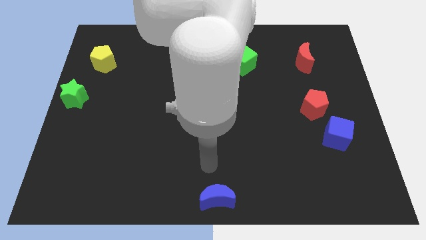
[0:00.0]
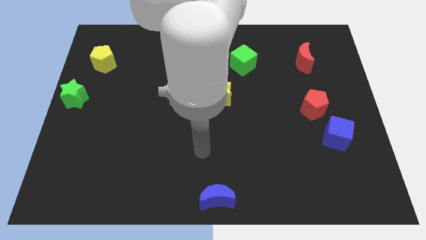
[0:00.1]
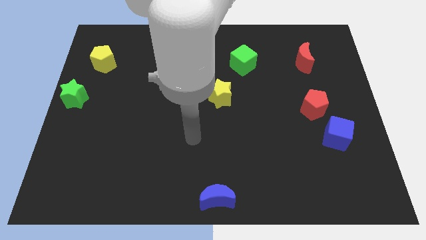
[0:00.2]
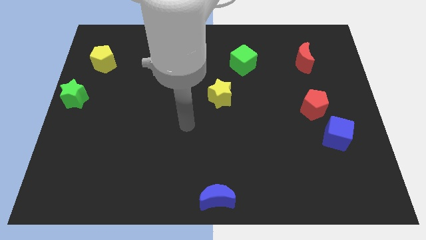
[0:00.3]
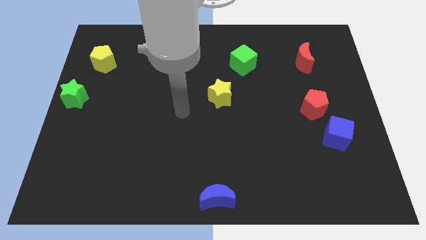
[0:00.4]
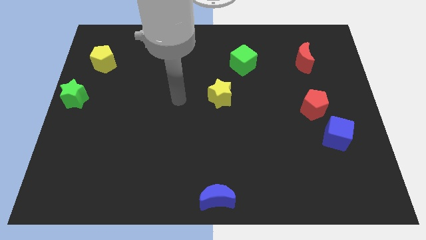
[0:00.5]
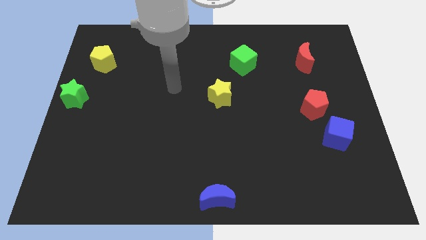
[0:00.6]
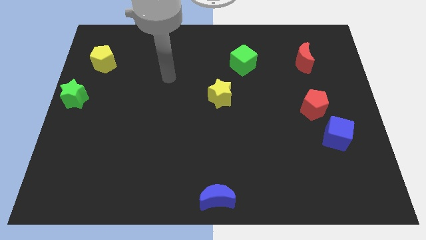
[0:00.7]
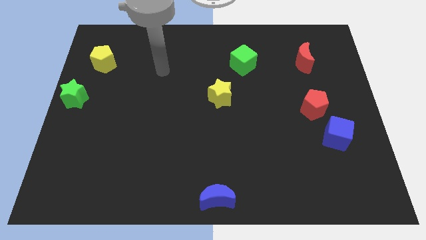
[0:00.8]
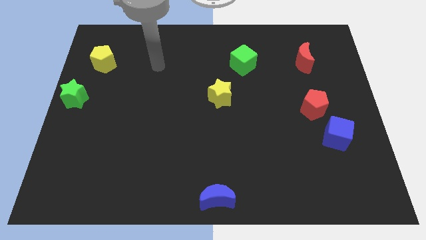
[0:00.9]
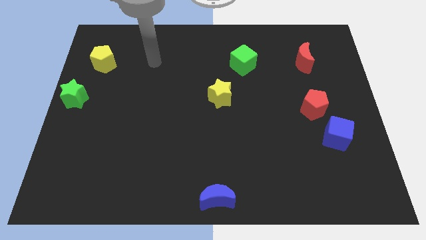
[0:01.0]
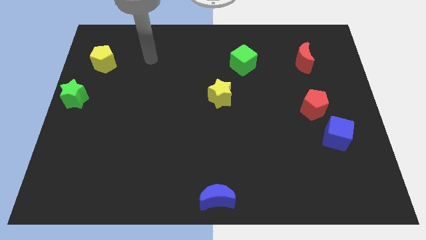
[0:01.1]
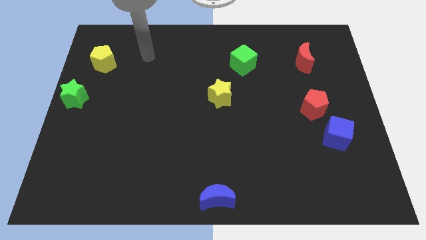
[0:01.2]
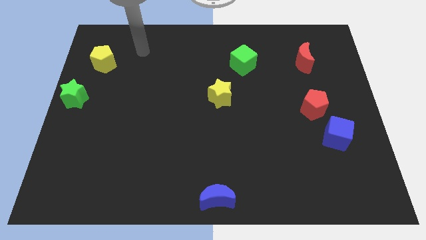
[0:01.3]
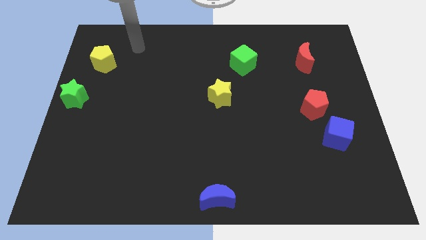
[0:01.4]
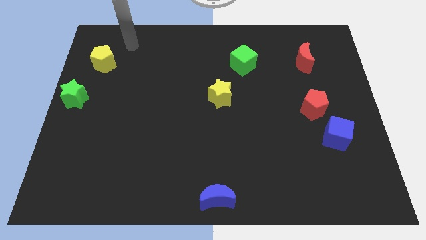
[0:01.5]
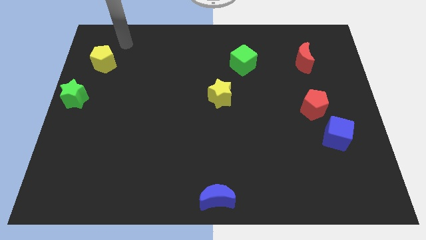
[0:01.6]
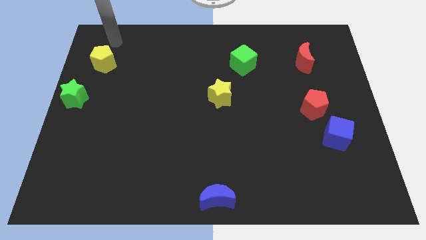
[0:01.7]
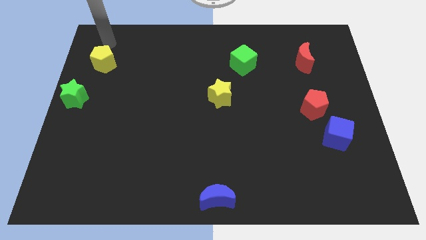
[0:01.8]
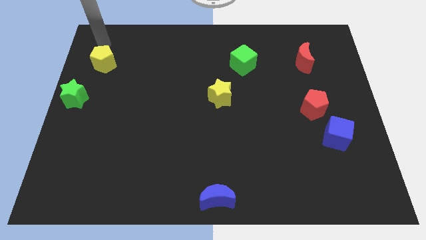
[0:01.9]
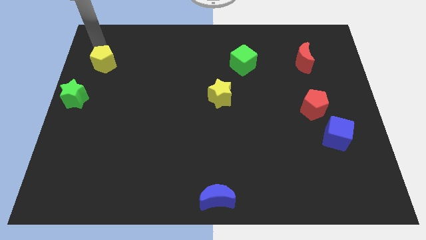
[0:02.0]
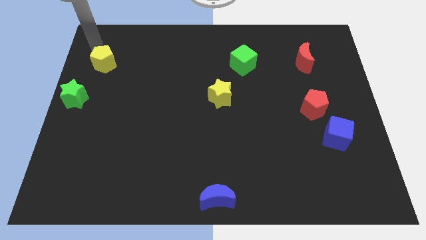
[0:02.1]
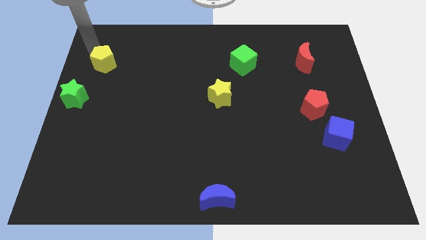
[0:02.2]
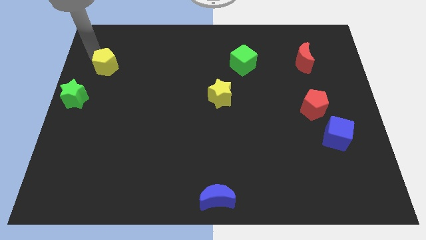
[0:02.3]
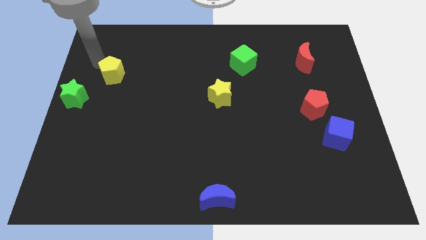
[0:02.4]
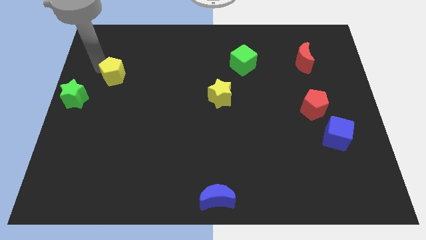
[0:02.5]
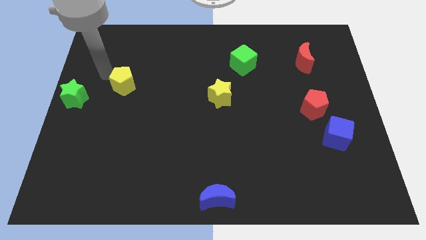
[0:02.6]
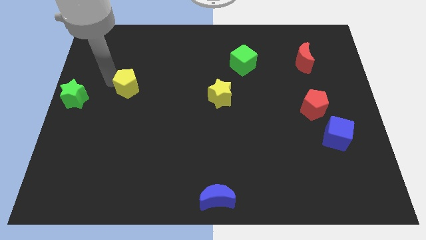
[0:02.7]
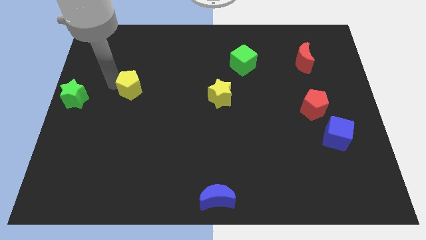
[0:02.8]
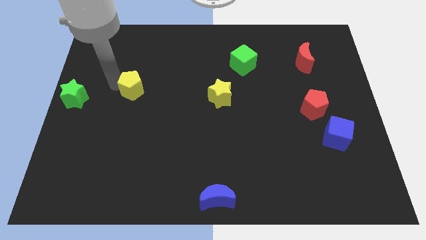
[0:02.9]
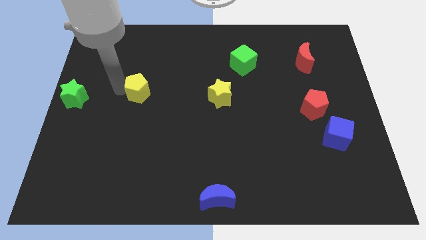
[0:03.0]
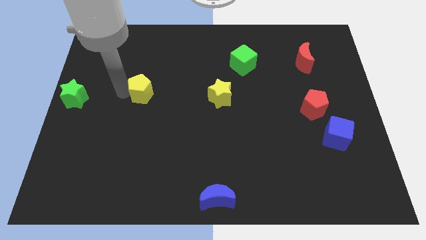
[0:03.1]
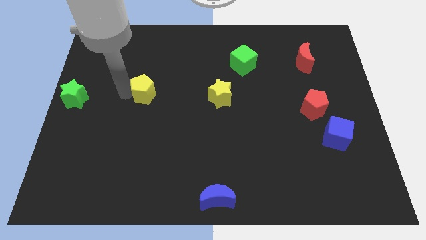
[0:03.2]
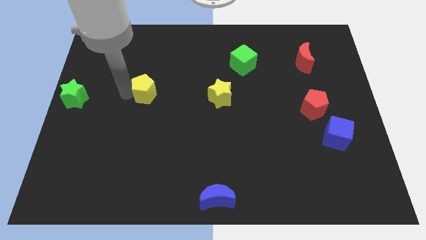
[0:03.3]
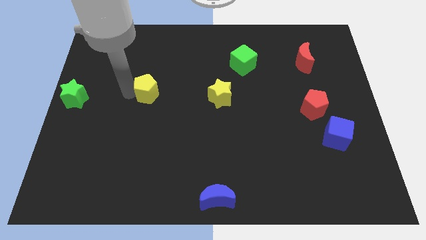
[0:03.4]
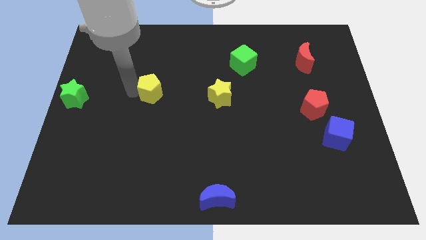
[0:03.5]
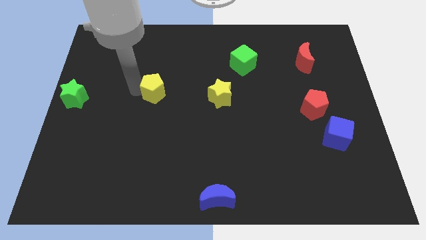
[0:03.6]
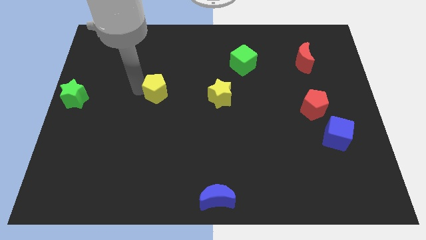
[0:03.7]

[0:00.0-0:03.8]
place the yellow pentagon in between the green star and the yellow star

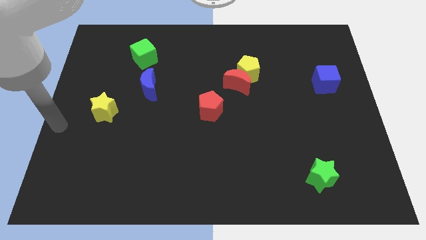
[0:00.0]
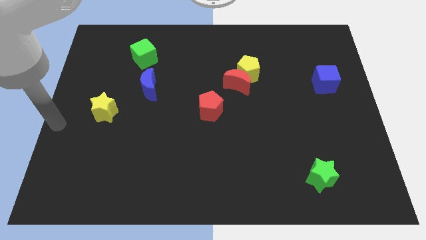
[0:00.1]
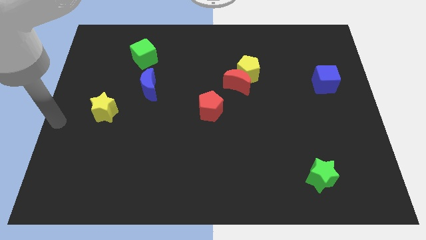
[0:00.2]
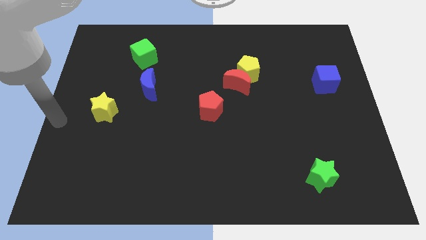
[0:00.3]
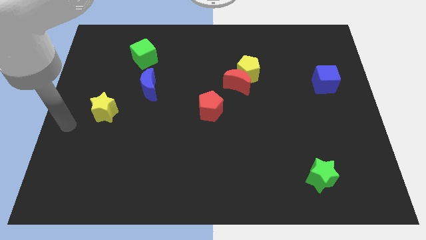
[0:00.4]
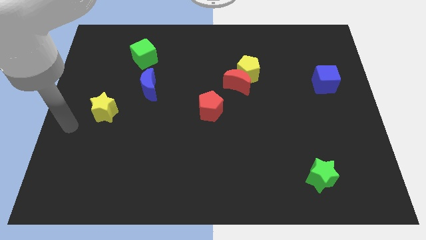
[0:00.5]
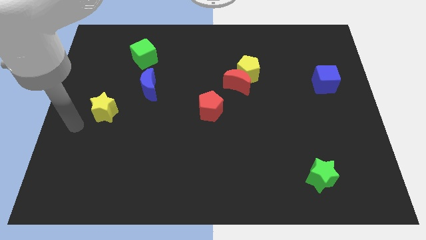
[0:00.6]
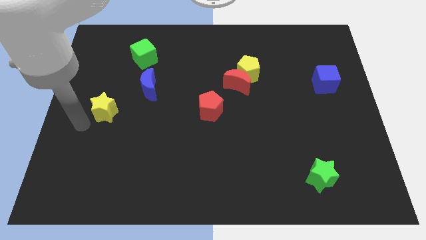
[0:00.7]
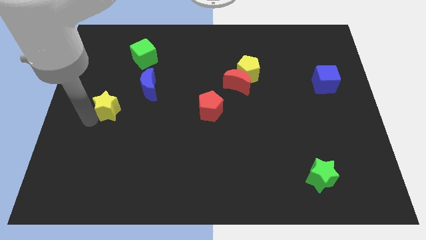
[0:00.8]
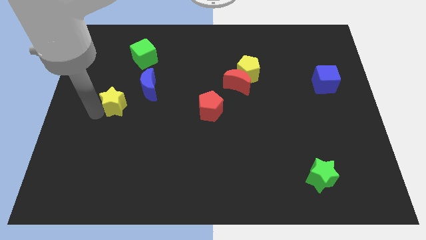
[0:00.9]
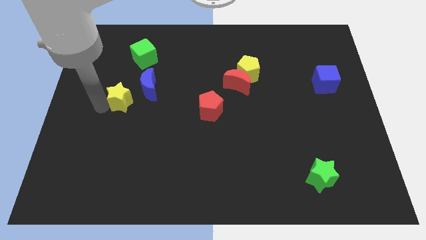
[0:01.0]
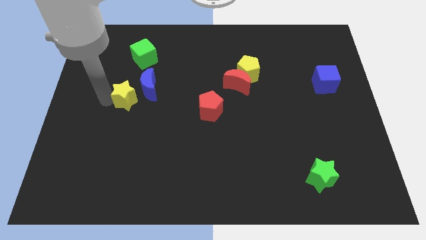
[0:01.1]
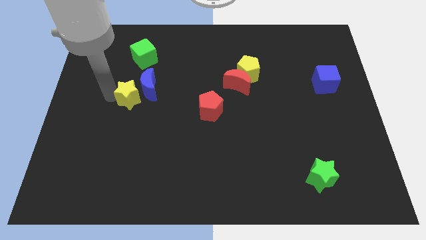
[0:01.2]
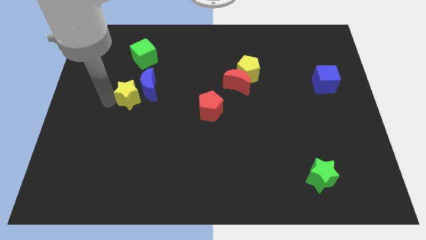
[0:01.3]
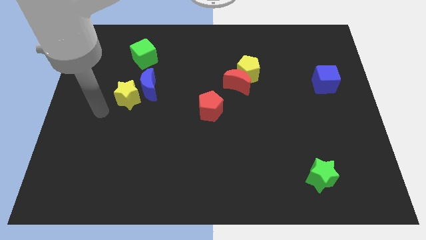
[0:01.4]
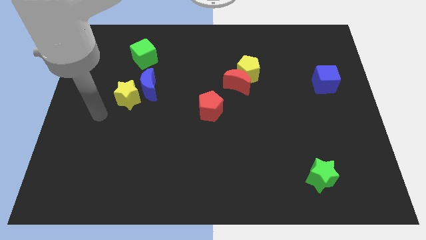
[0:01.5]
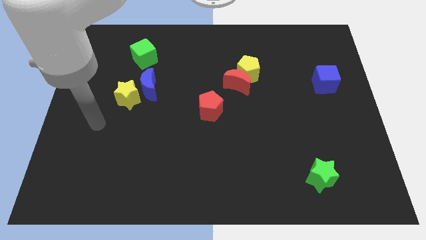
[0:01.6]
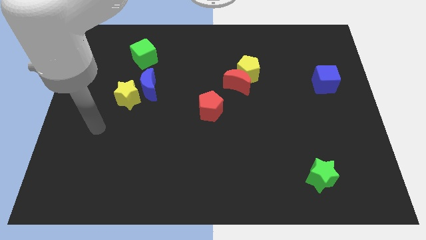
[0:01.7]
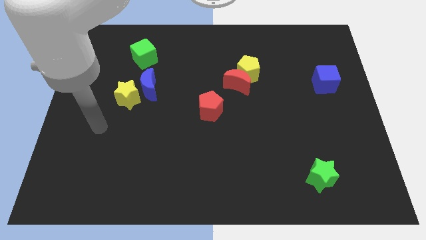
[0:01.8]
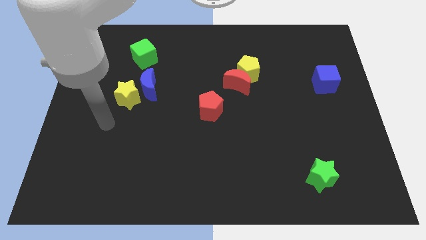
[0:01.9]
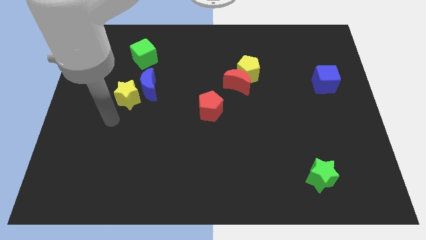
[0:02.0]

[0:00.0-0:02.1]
place the yellow star to the left bottom of the blue crescent

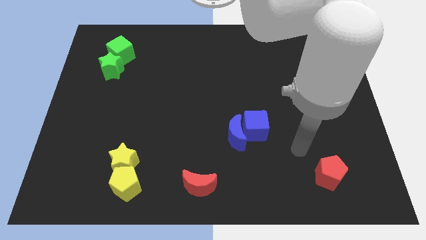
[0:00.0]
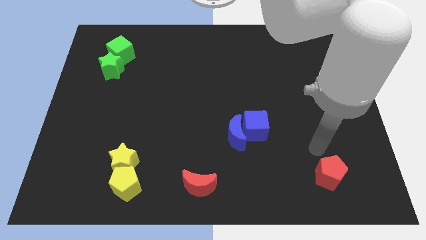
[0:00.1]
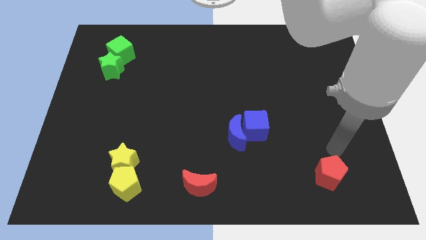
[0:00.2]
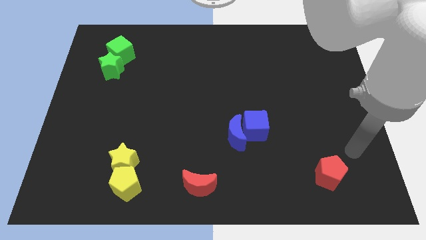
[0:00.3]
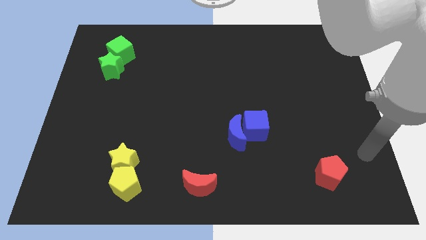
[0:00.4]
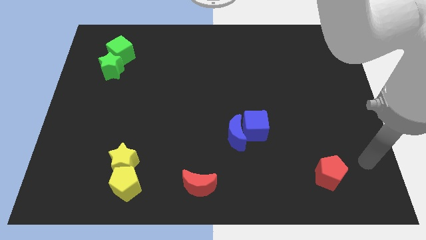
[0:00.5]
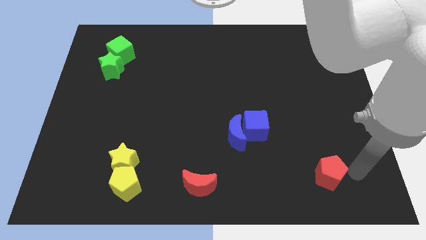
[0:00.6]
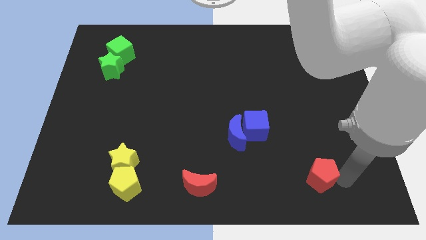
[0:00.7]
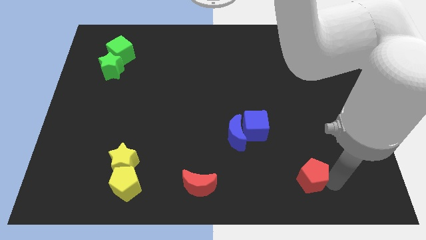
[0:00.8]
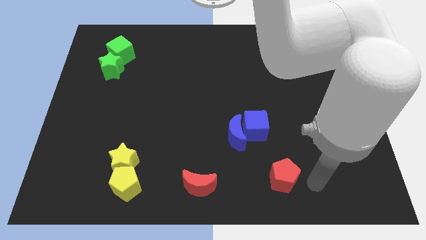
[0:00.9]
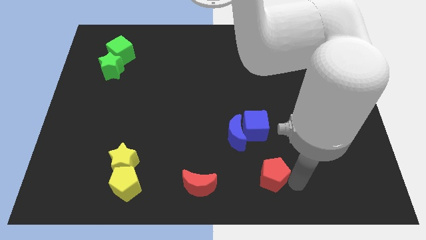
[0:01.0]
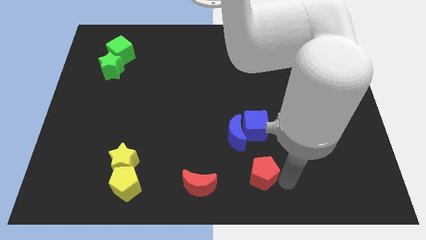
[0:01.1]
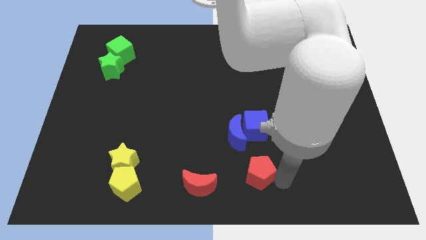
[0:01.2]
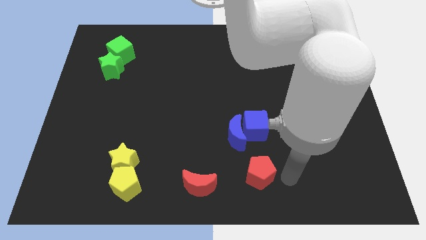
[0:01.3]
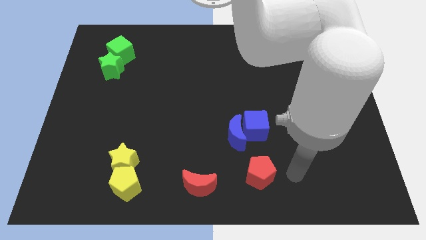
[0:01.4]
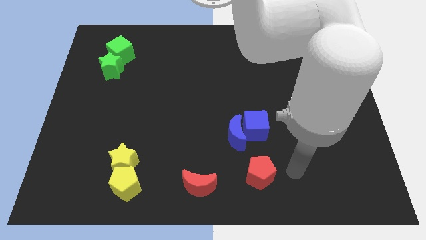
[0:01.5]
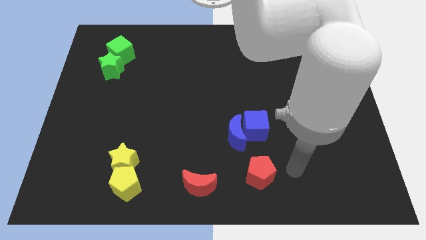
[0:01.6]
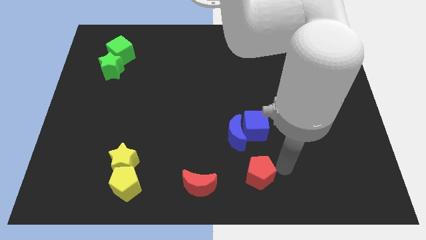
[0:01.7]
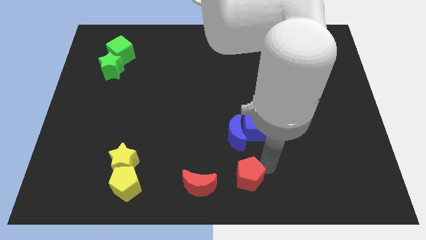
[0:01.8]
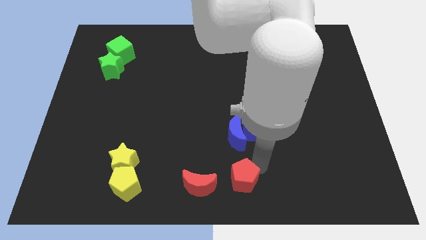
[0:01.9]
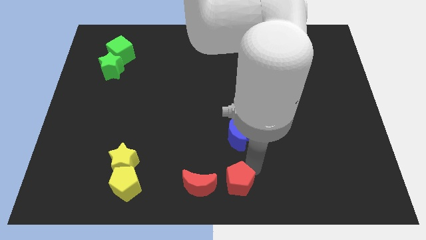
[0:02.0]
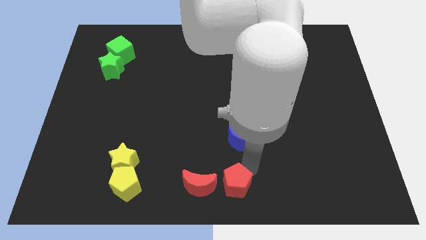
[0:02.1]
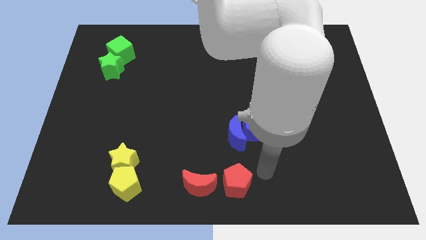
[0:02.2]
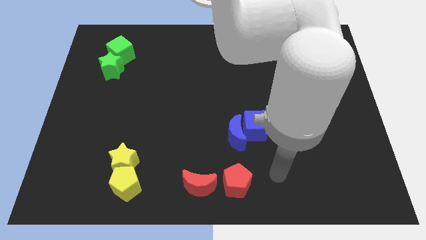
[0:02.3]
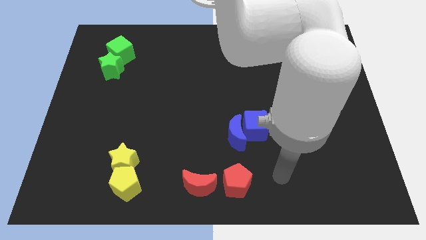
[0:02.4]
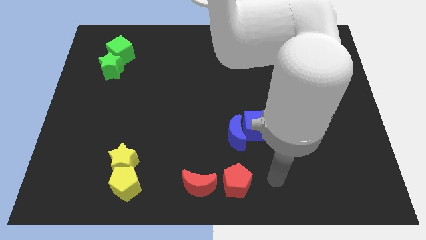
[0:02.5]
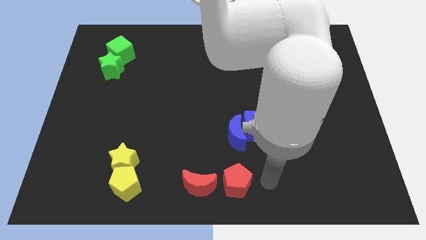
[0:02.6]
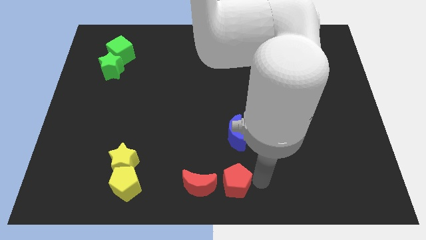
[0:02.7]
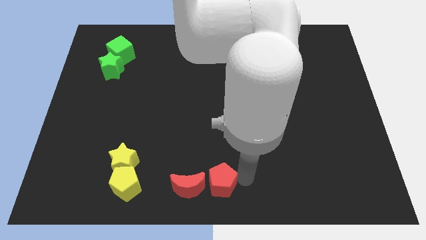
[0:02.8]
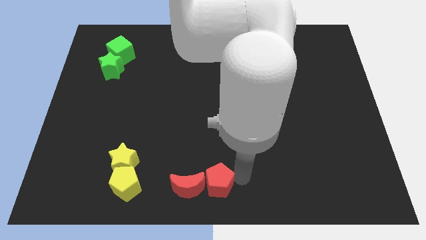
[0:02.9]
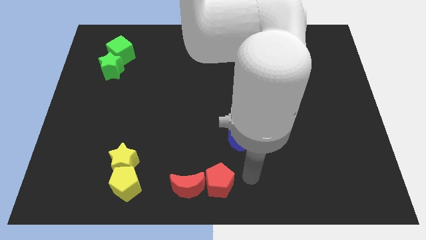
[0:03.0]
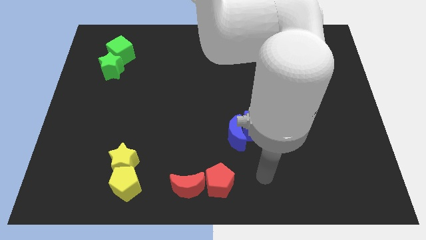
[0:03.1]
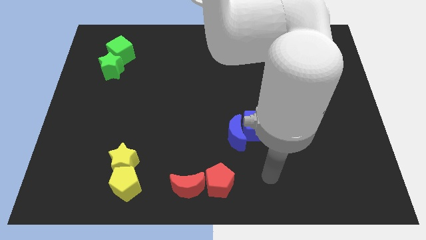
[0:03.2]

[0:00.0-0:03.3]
push the red pentagon into the red moon
